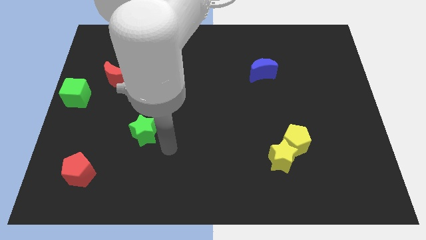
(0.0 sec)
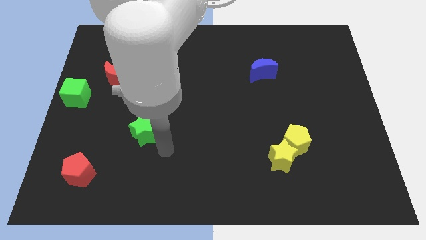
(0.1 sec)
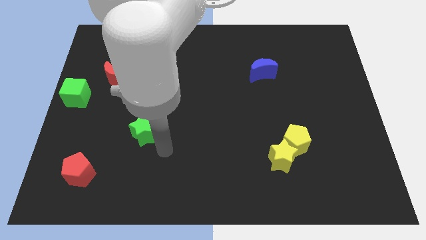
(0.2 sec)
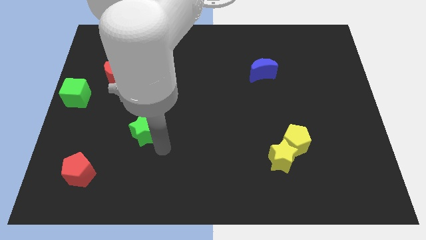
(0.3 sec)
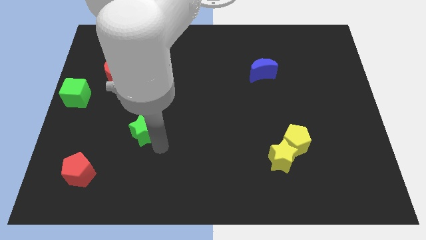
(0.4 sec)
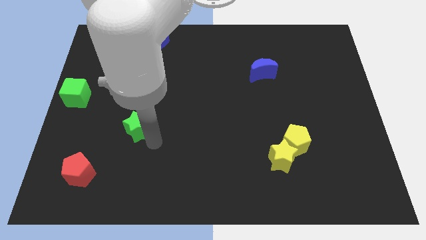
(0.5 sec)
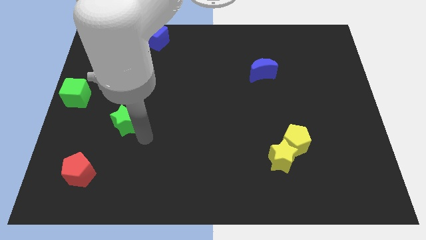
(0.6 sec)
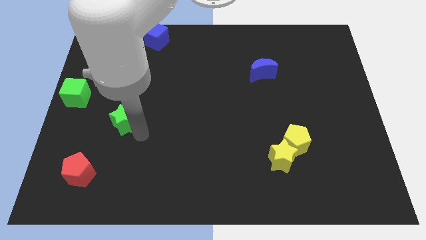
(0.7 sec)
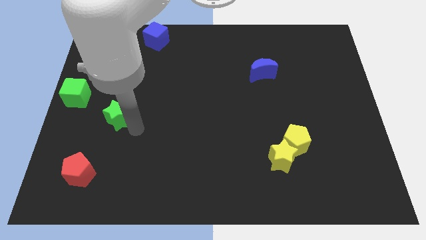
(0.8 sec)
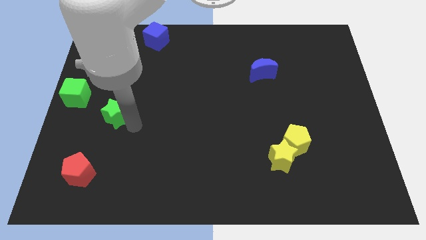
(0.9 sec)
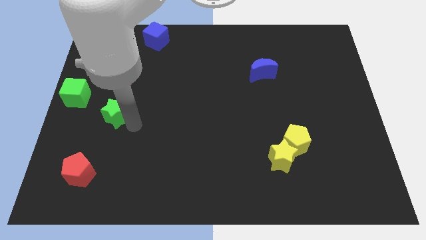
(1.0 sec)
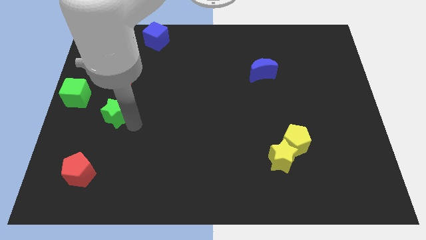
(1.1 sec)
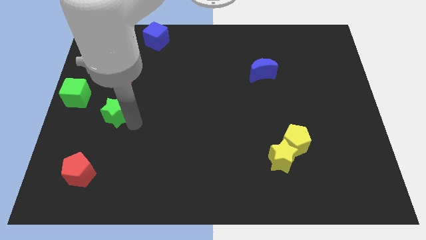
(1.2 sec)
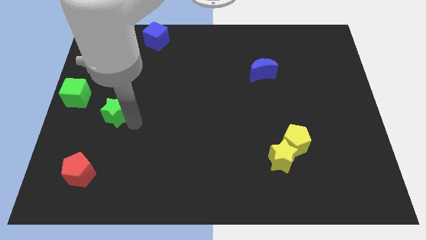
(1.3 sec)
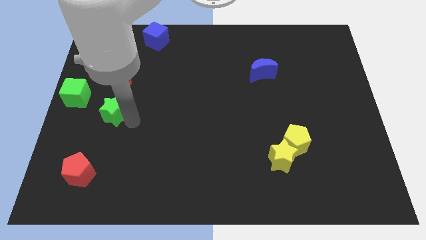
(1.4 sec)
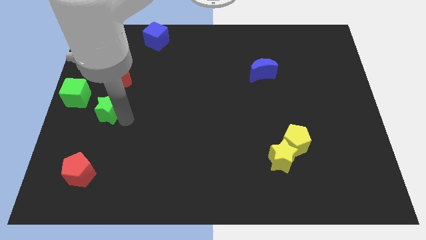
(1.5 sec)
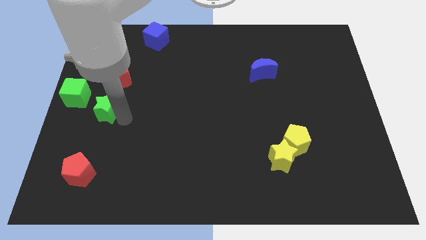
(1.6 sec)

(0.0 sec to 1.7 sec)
place green star to the bottom of red moon

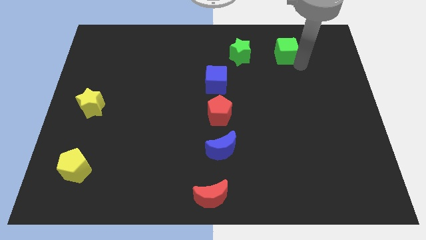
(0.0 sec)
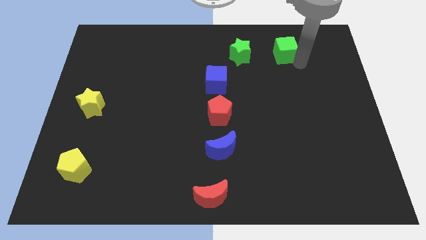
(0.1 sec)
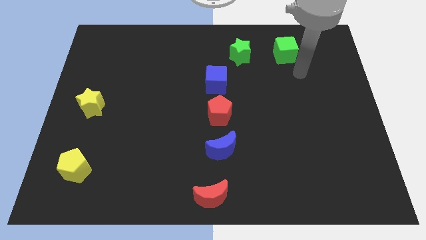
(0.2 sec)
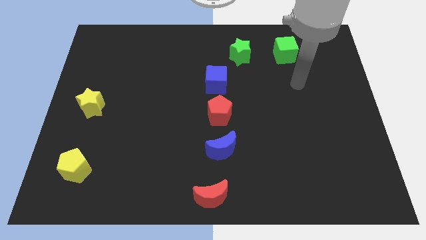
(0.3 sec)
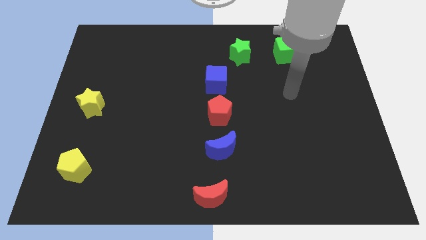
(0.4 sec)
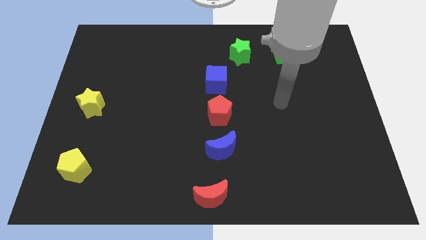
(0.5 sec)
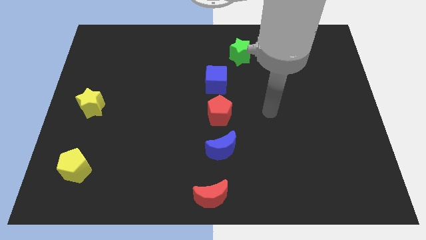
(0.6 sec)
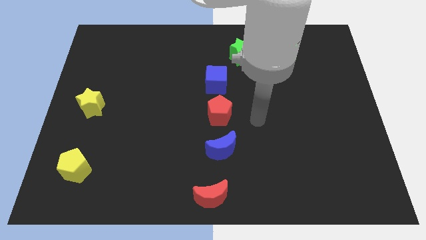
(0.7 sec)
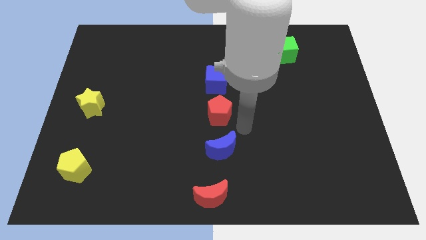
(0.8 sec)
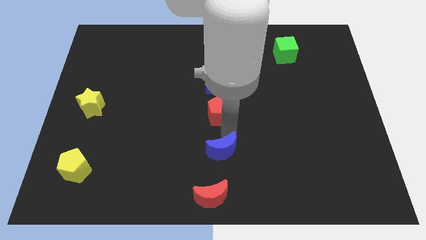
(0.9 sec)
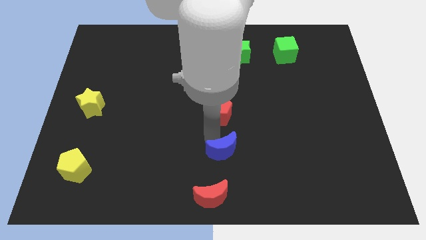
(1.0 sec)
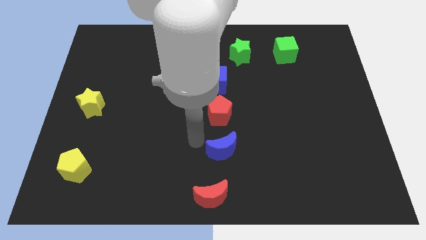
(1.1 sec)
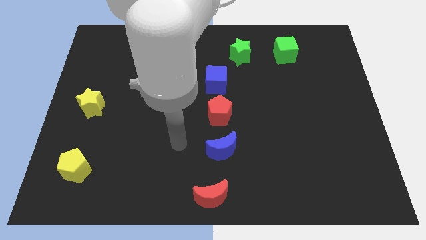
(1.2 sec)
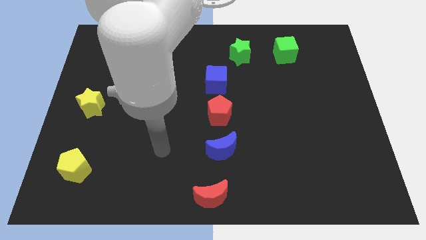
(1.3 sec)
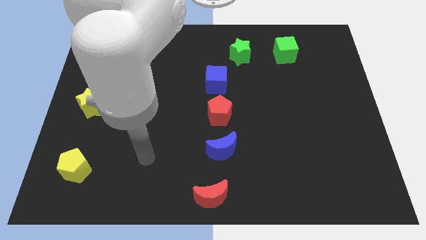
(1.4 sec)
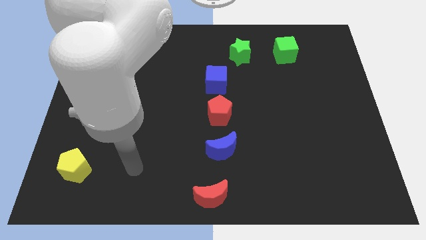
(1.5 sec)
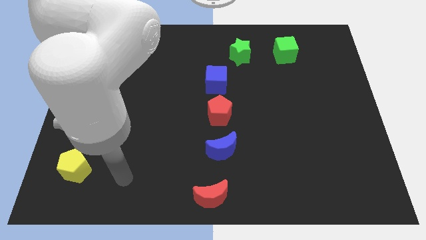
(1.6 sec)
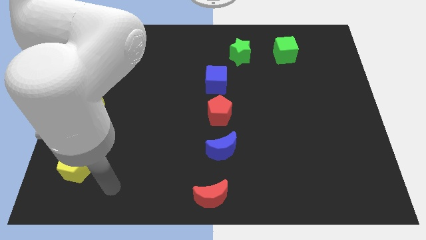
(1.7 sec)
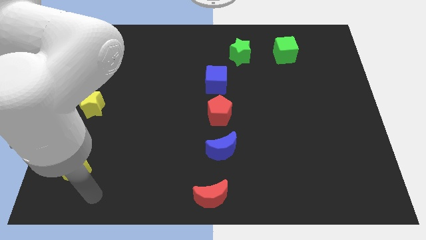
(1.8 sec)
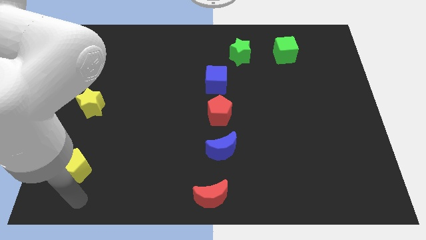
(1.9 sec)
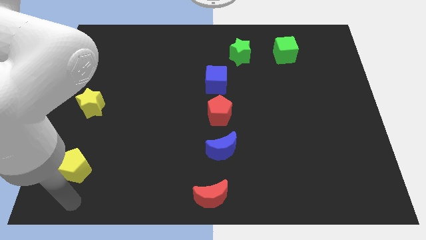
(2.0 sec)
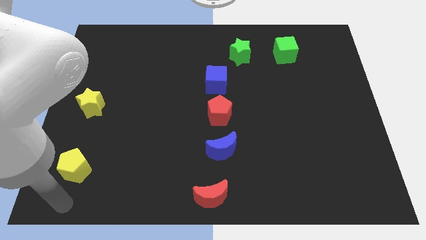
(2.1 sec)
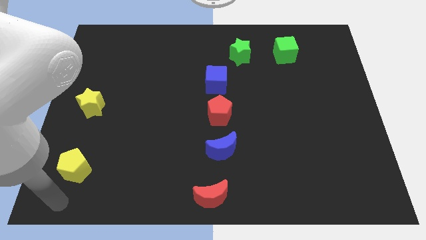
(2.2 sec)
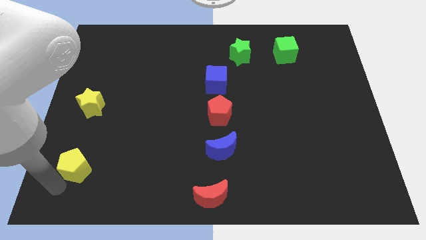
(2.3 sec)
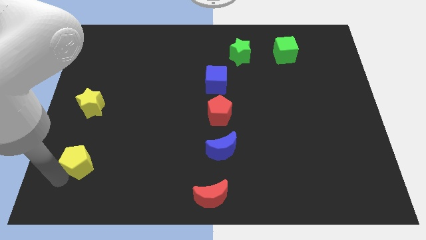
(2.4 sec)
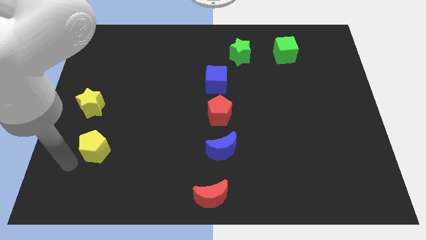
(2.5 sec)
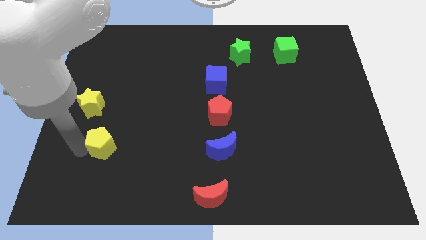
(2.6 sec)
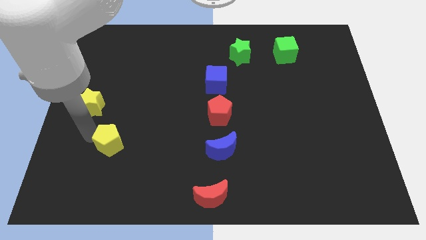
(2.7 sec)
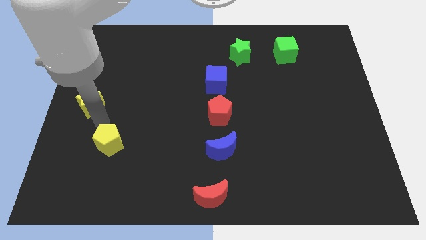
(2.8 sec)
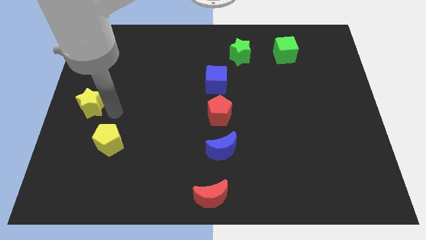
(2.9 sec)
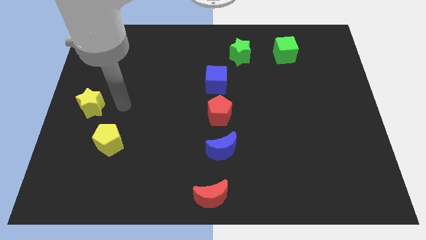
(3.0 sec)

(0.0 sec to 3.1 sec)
move the arm behind the yellow pentagon

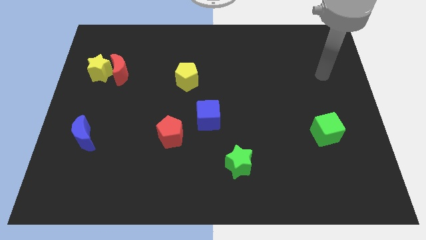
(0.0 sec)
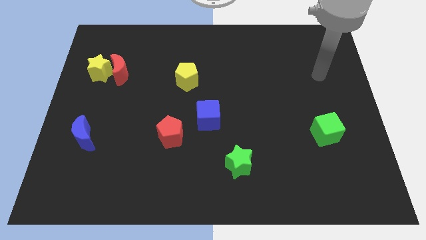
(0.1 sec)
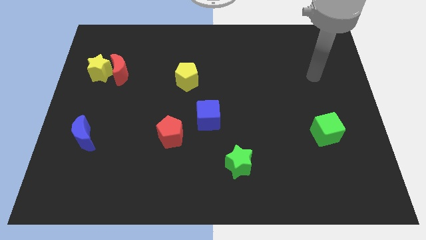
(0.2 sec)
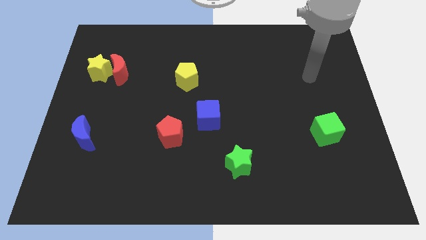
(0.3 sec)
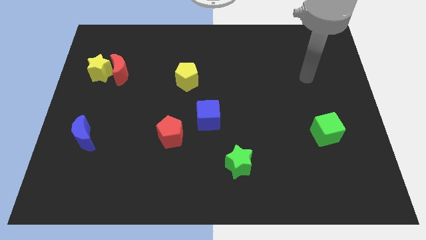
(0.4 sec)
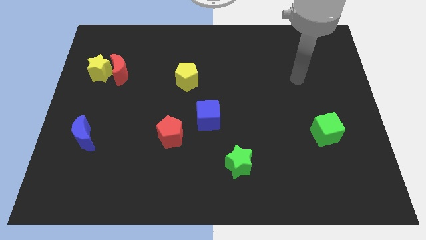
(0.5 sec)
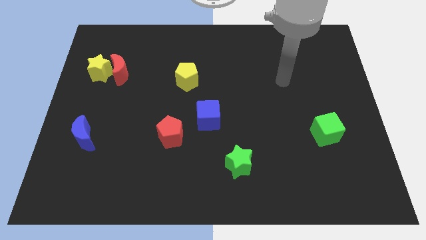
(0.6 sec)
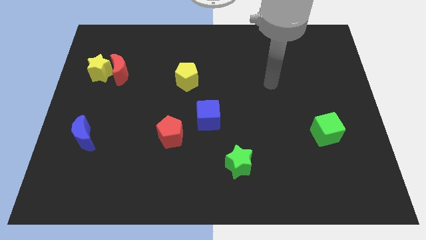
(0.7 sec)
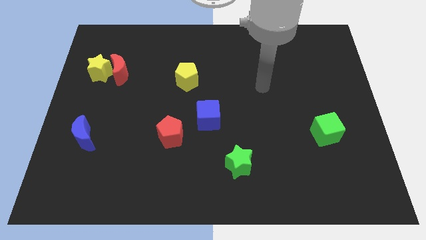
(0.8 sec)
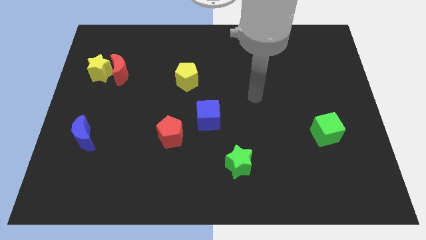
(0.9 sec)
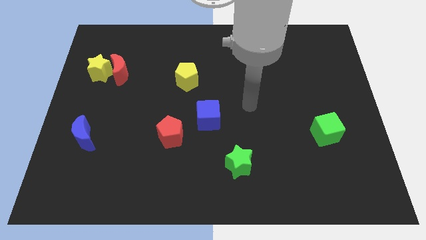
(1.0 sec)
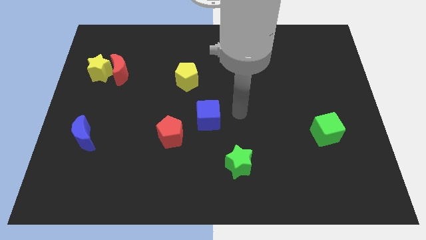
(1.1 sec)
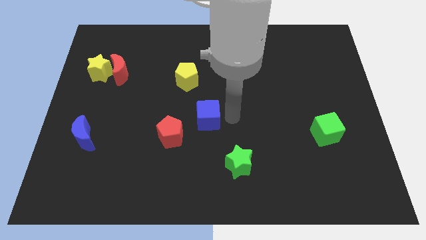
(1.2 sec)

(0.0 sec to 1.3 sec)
move your arm to the center of the board

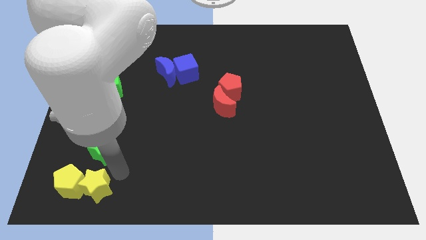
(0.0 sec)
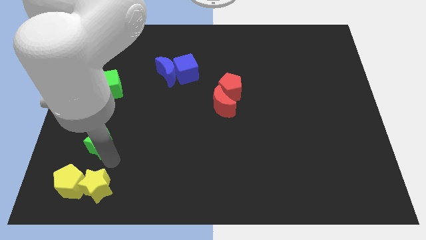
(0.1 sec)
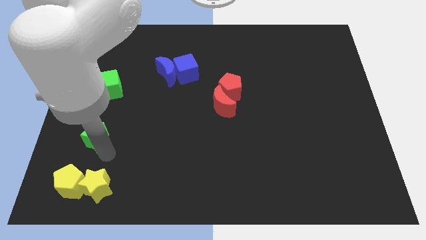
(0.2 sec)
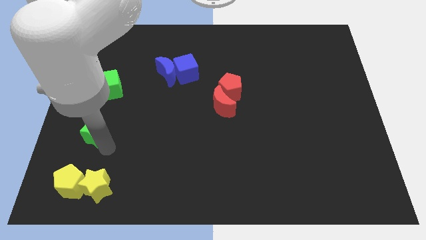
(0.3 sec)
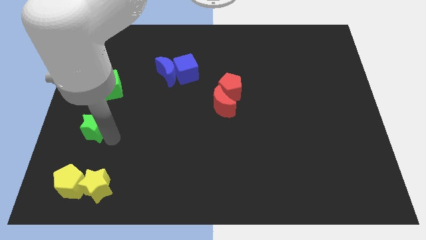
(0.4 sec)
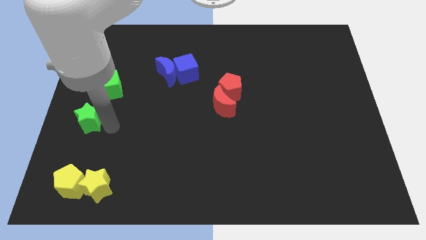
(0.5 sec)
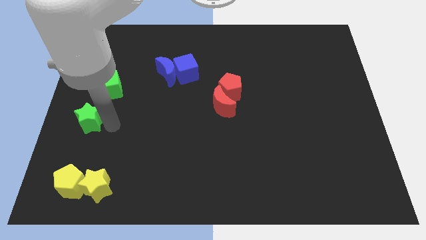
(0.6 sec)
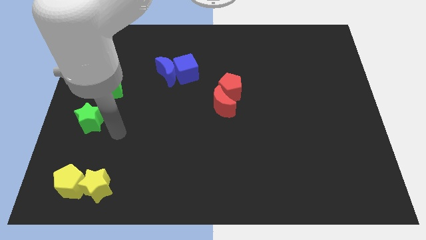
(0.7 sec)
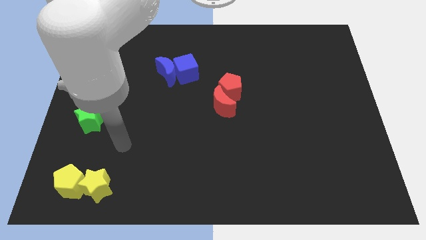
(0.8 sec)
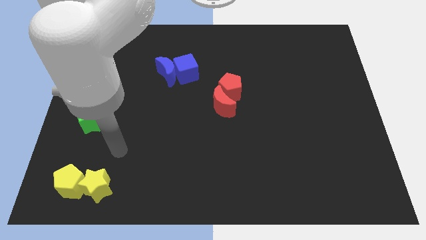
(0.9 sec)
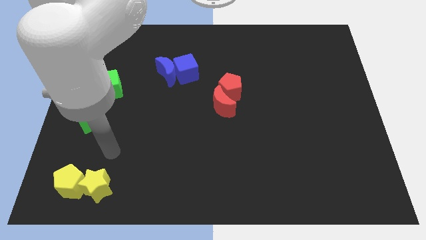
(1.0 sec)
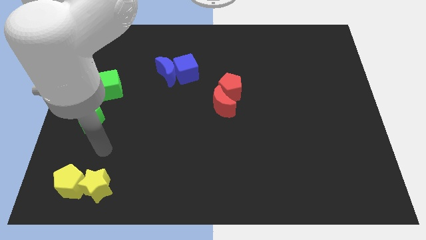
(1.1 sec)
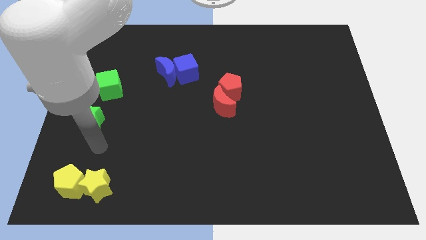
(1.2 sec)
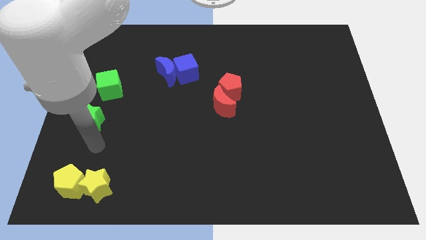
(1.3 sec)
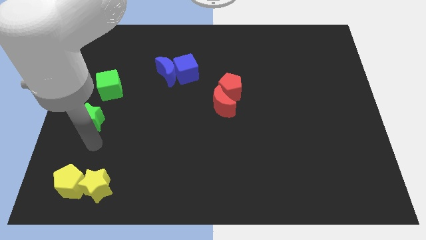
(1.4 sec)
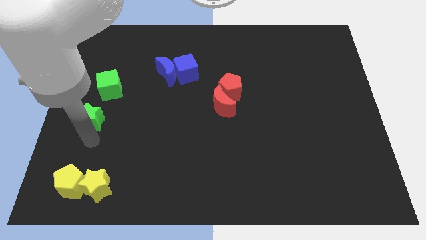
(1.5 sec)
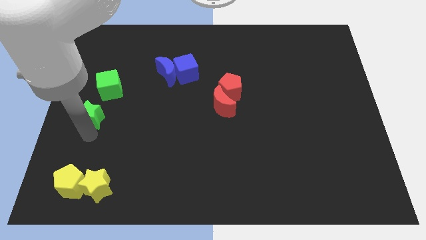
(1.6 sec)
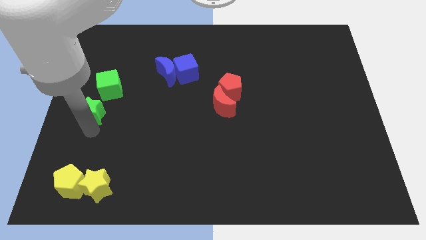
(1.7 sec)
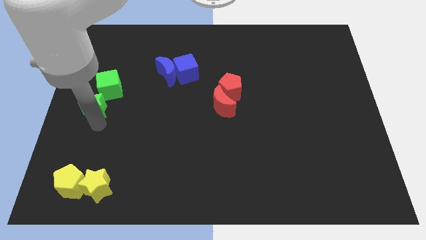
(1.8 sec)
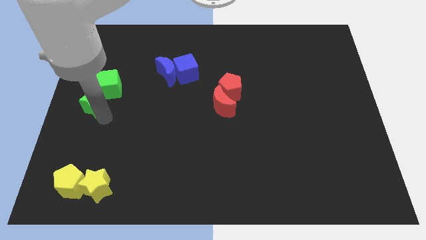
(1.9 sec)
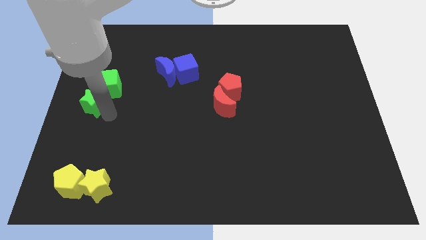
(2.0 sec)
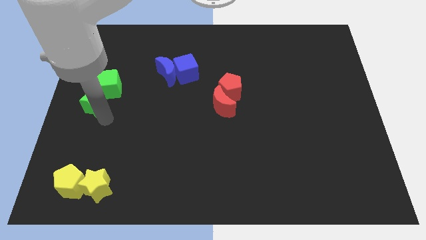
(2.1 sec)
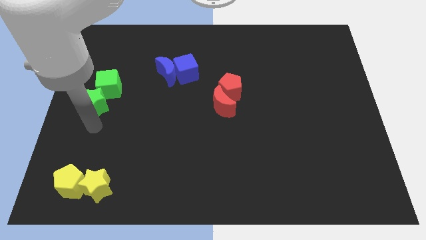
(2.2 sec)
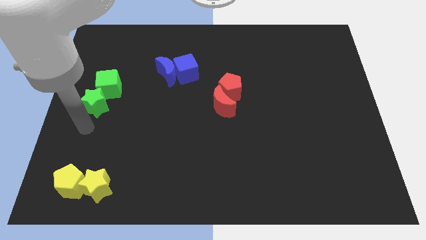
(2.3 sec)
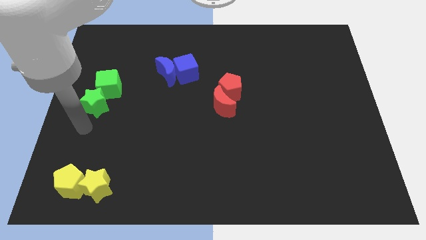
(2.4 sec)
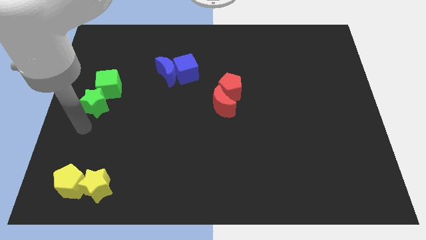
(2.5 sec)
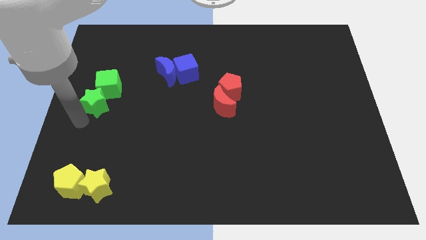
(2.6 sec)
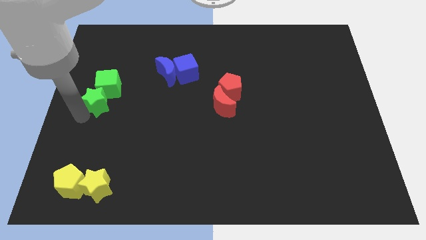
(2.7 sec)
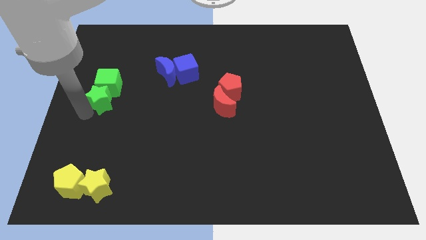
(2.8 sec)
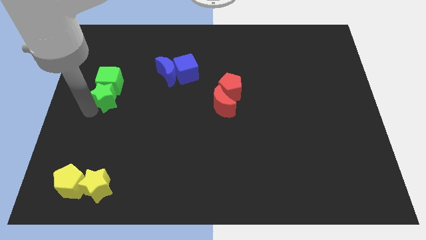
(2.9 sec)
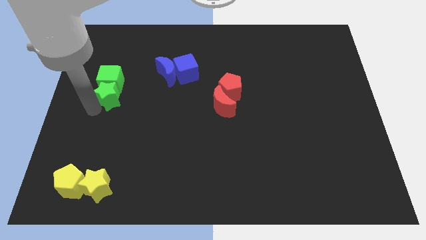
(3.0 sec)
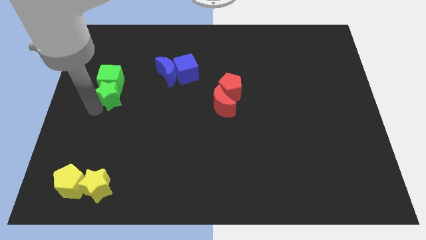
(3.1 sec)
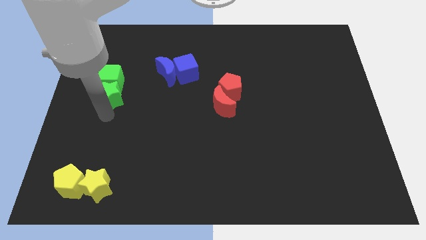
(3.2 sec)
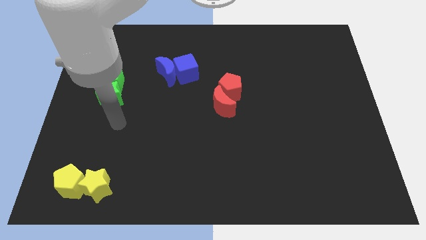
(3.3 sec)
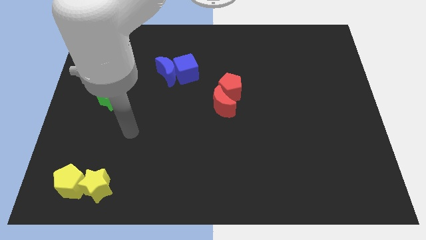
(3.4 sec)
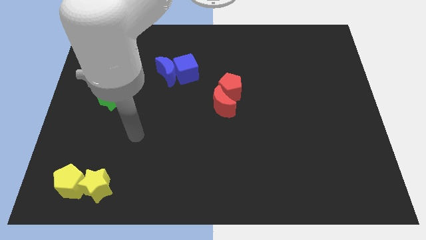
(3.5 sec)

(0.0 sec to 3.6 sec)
push the green star into the green cube
